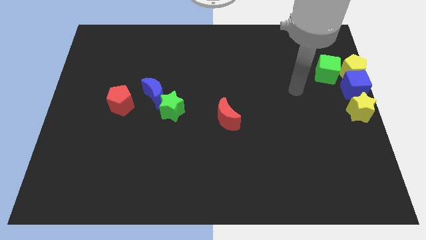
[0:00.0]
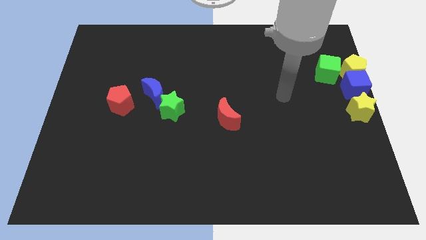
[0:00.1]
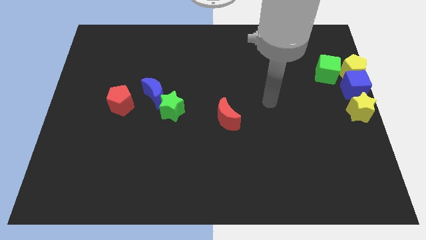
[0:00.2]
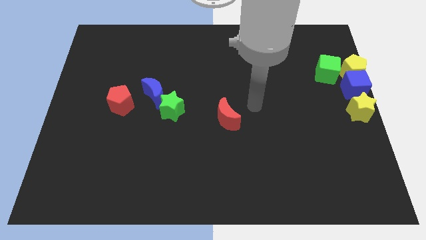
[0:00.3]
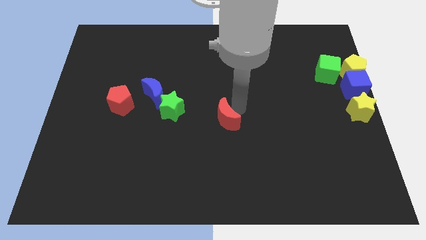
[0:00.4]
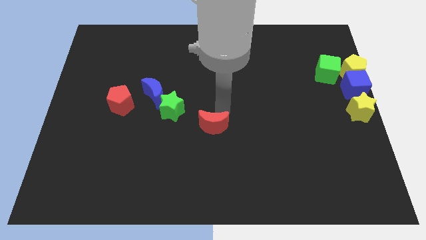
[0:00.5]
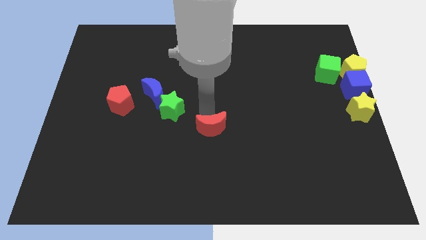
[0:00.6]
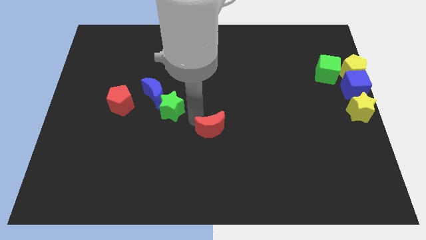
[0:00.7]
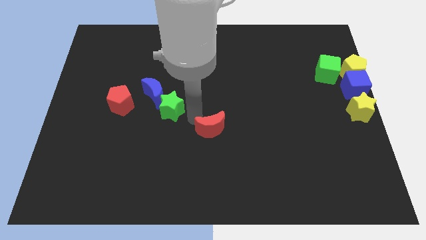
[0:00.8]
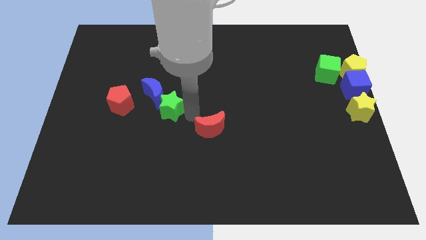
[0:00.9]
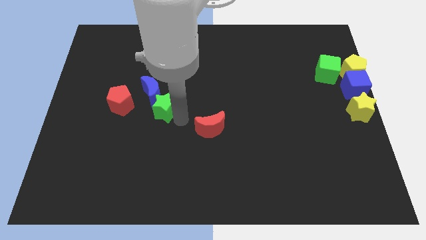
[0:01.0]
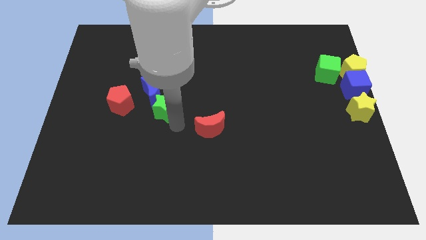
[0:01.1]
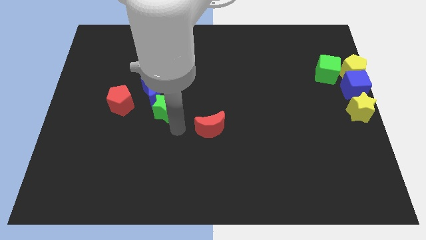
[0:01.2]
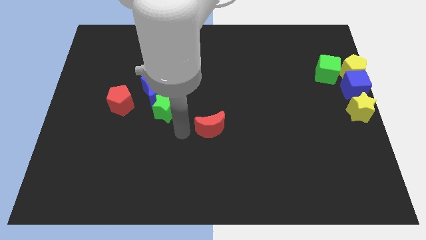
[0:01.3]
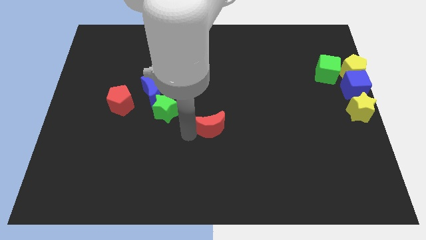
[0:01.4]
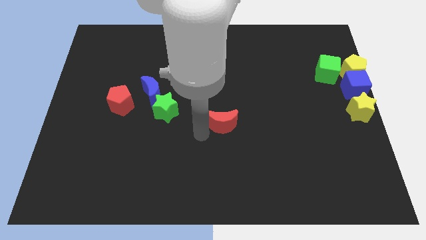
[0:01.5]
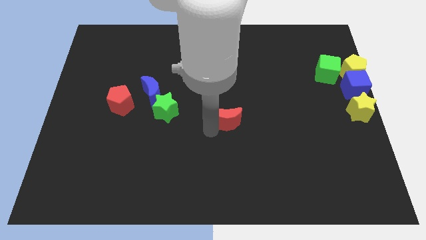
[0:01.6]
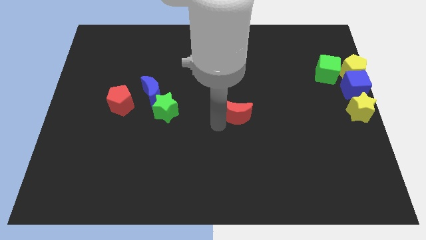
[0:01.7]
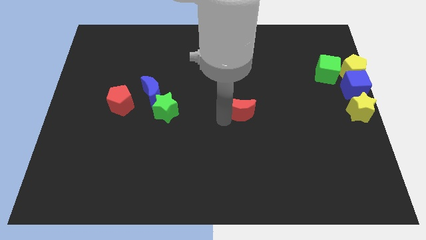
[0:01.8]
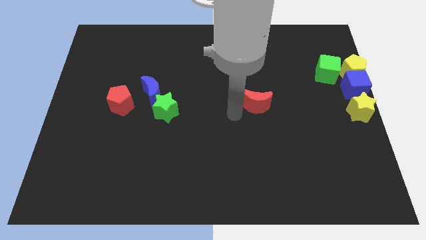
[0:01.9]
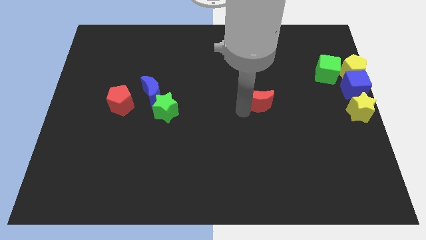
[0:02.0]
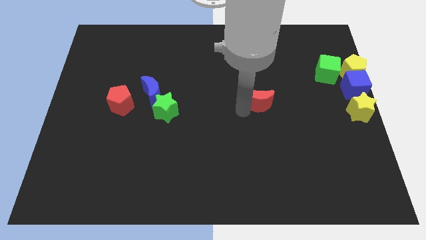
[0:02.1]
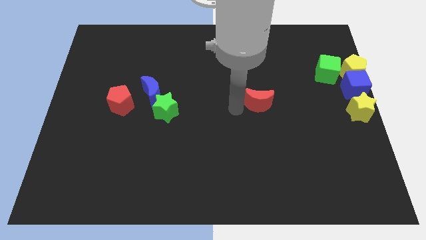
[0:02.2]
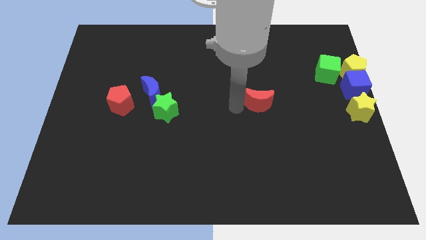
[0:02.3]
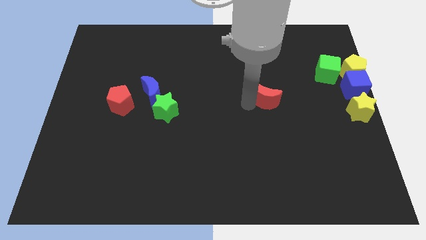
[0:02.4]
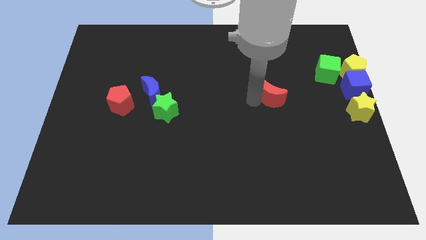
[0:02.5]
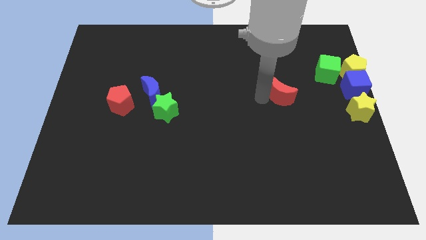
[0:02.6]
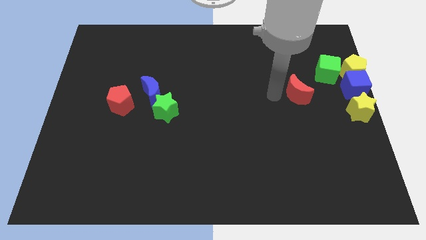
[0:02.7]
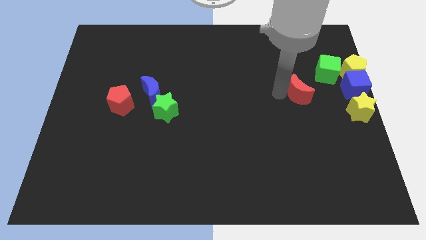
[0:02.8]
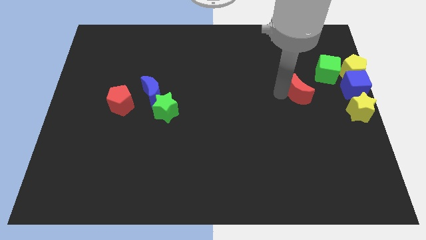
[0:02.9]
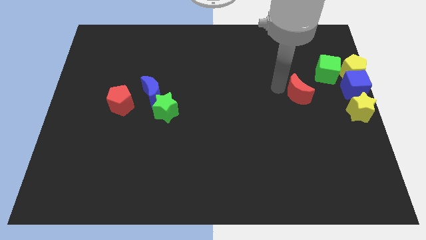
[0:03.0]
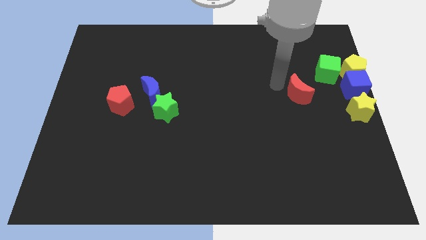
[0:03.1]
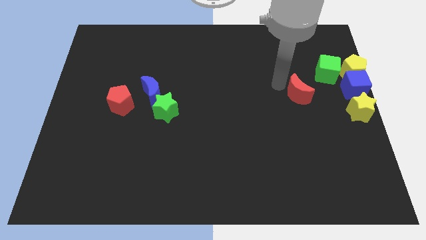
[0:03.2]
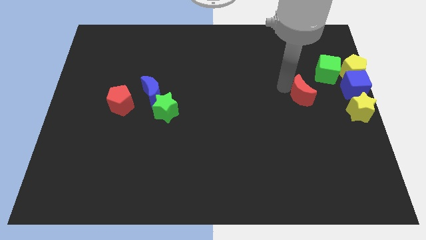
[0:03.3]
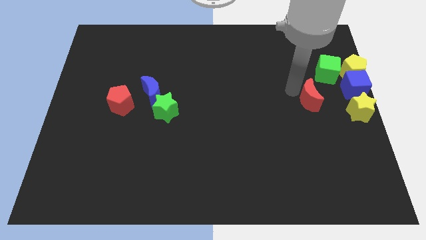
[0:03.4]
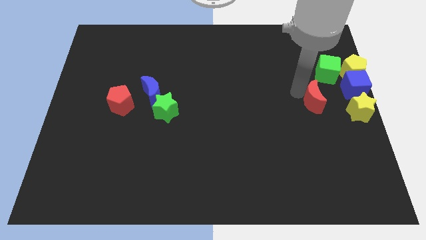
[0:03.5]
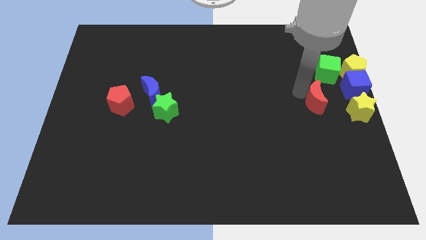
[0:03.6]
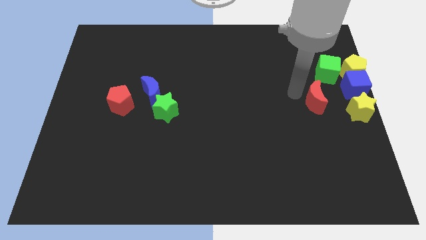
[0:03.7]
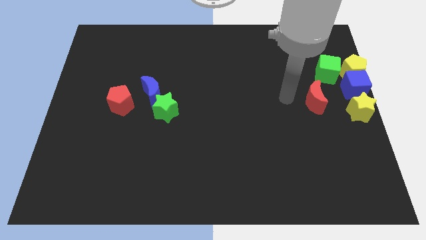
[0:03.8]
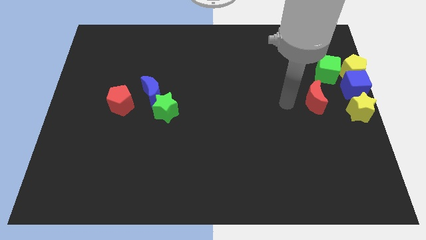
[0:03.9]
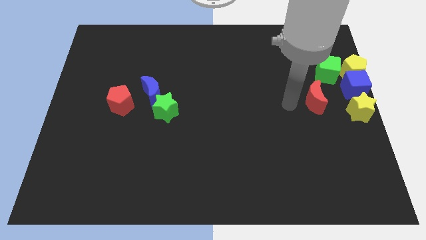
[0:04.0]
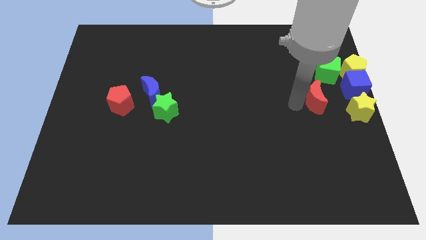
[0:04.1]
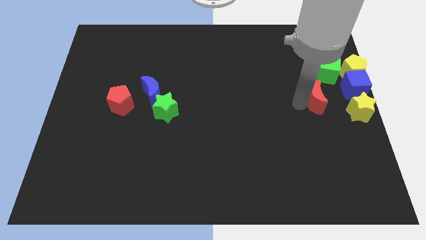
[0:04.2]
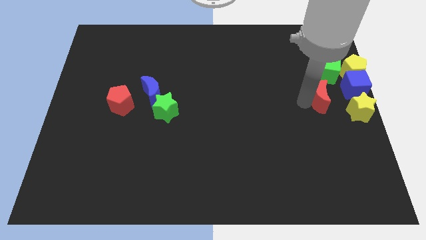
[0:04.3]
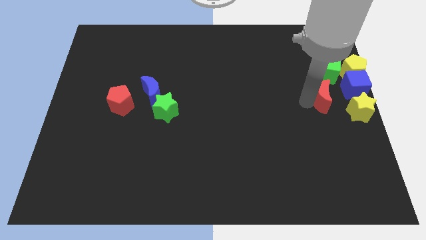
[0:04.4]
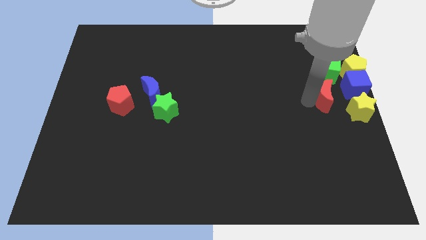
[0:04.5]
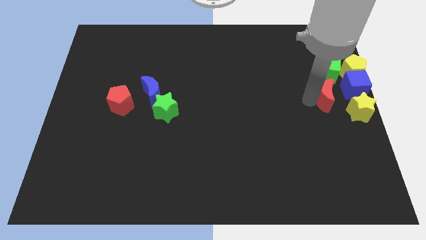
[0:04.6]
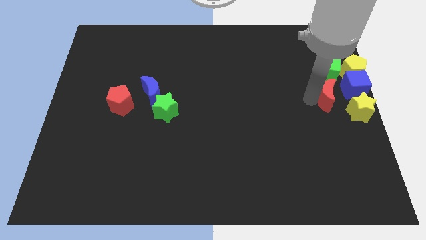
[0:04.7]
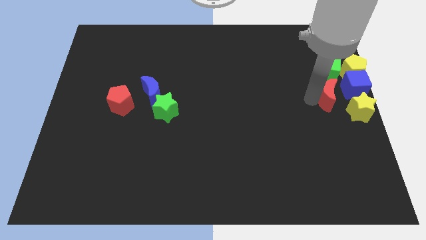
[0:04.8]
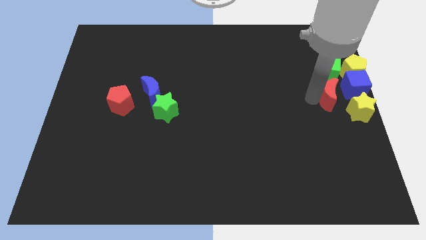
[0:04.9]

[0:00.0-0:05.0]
place the red crescent below the green cube

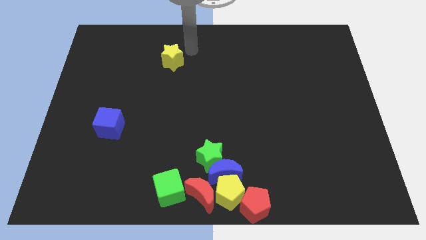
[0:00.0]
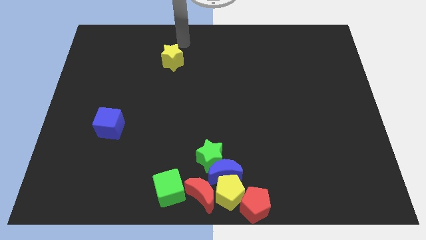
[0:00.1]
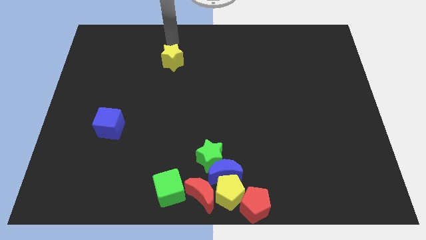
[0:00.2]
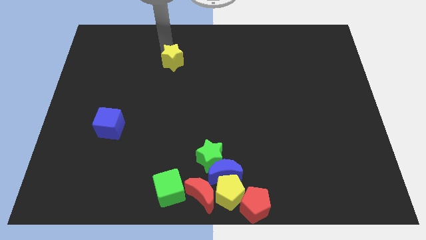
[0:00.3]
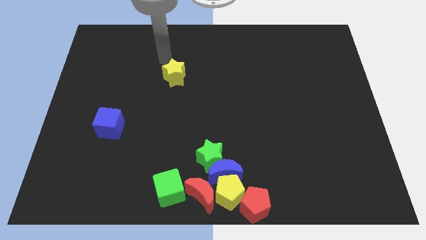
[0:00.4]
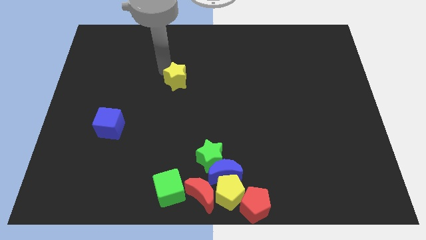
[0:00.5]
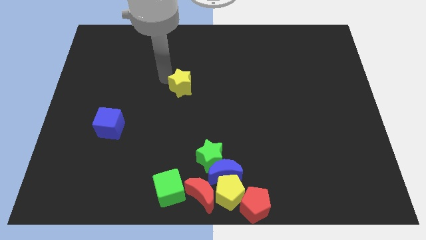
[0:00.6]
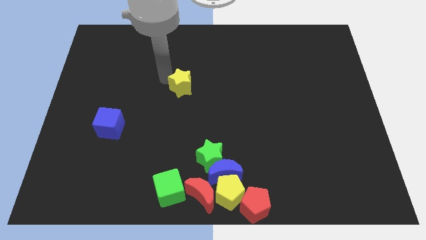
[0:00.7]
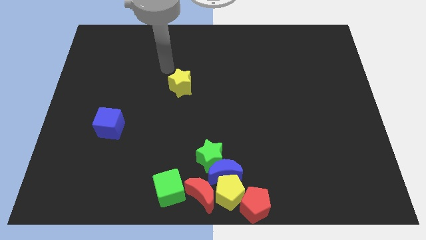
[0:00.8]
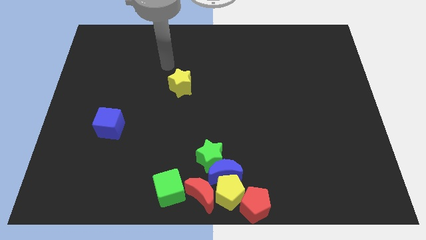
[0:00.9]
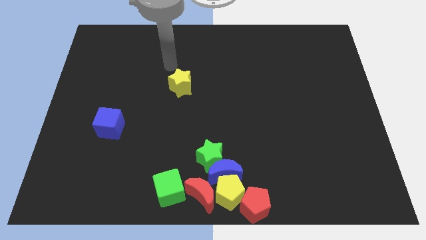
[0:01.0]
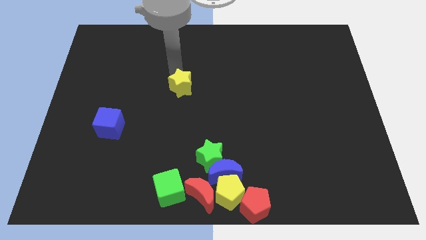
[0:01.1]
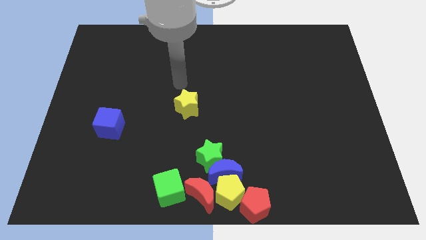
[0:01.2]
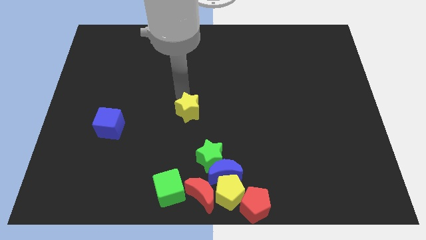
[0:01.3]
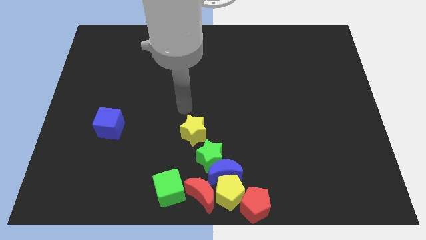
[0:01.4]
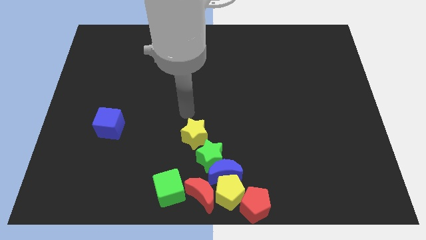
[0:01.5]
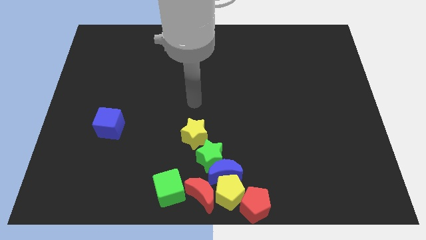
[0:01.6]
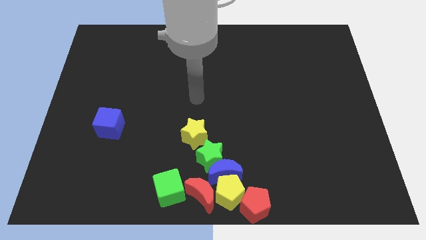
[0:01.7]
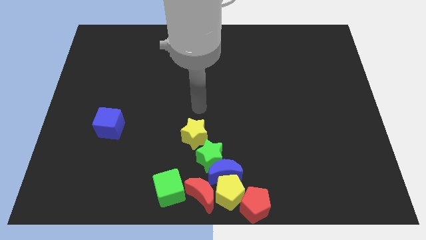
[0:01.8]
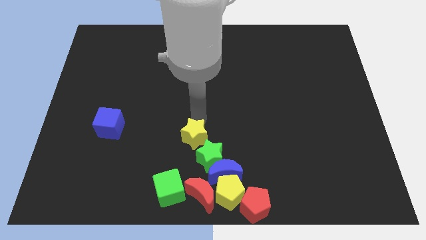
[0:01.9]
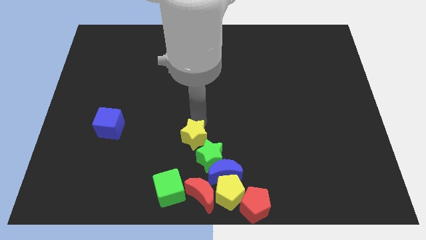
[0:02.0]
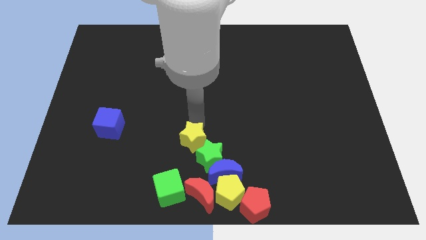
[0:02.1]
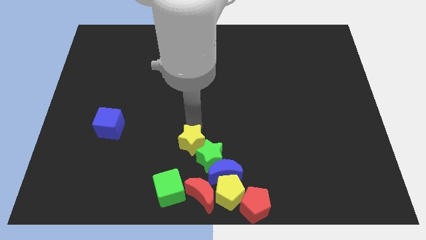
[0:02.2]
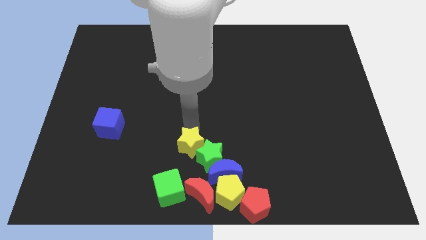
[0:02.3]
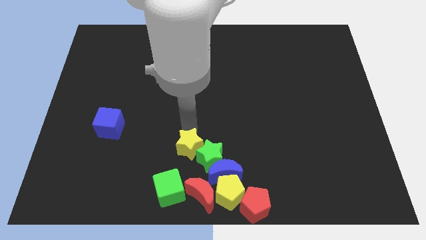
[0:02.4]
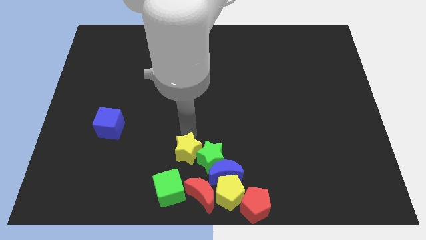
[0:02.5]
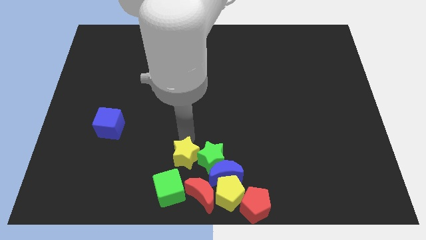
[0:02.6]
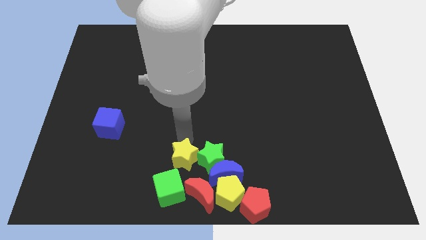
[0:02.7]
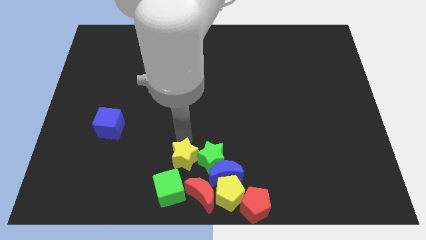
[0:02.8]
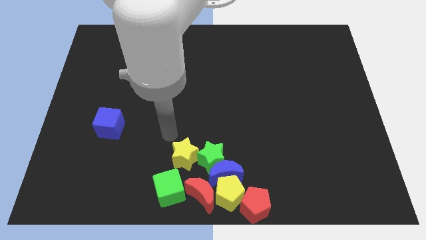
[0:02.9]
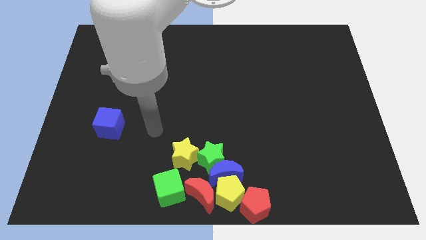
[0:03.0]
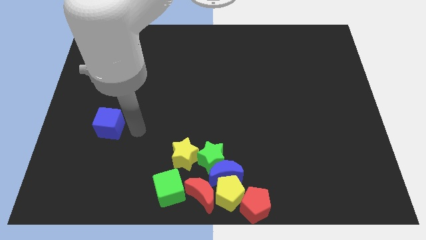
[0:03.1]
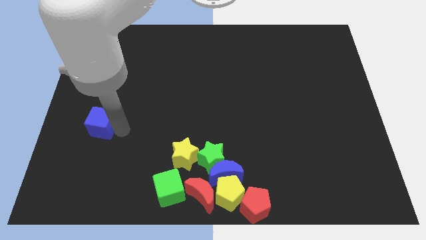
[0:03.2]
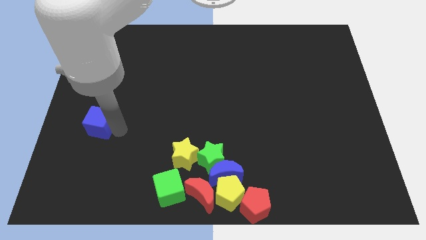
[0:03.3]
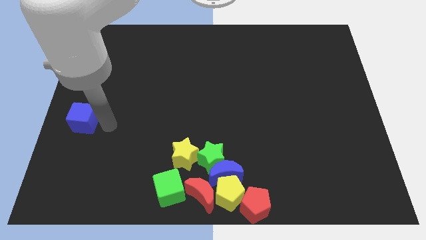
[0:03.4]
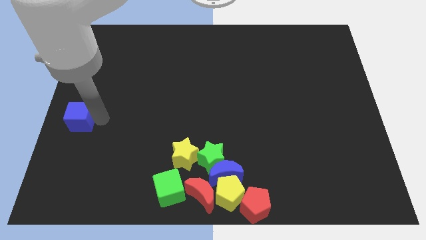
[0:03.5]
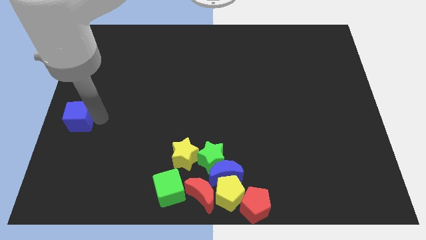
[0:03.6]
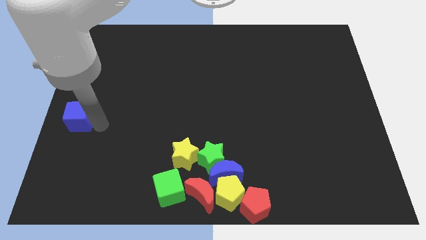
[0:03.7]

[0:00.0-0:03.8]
move yellow star left beside the green star
